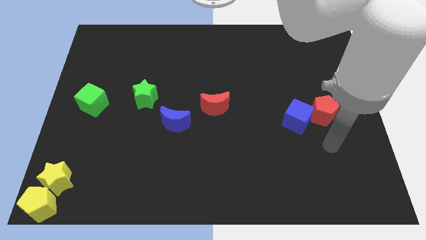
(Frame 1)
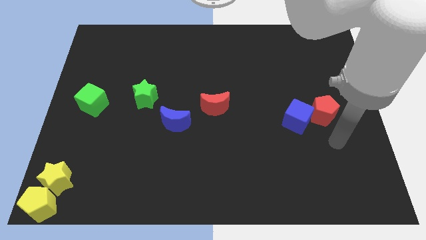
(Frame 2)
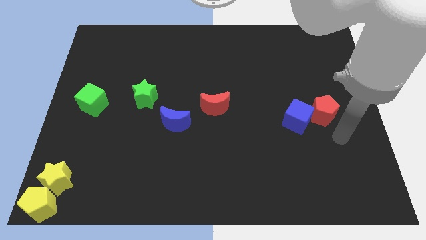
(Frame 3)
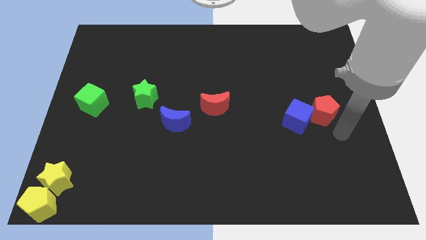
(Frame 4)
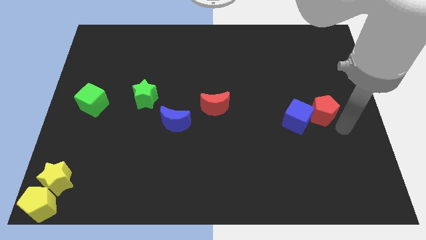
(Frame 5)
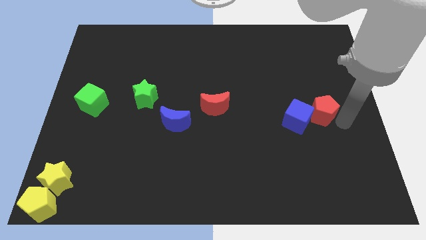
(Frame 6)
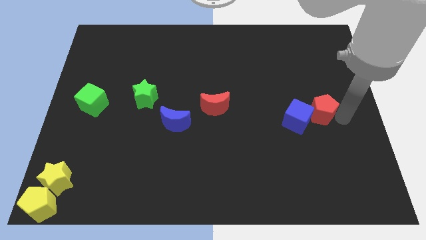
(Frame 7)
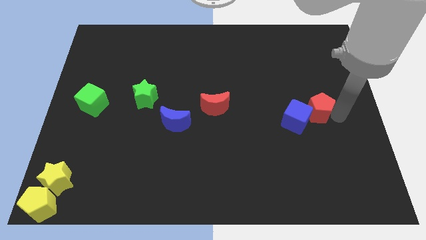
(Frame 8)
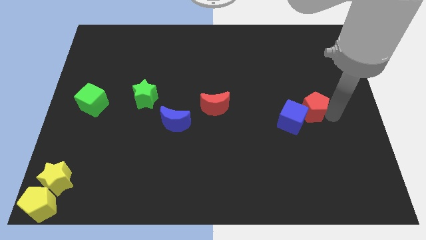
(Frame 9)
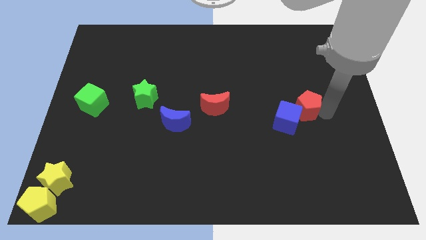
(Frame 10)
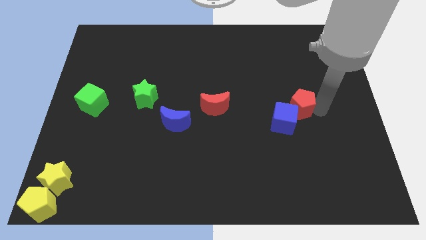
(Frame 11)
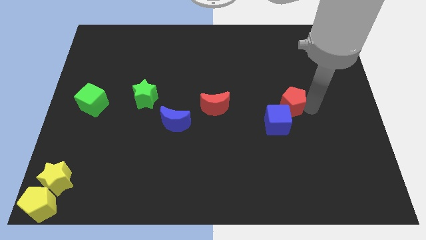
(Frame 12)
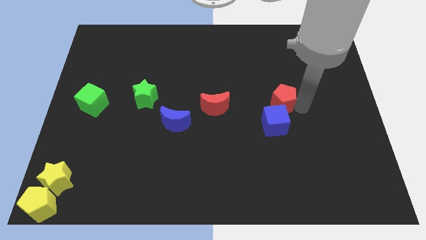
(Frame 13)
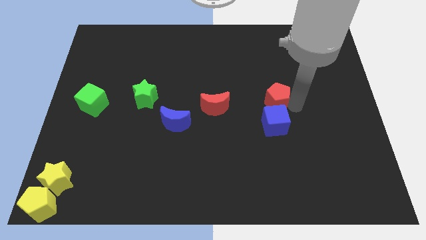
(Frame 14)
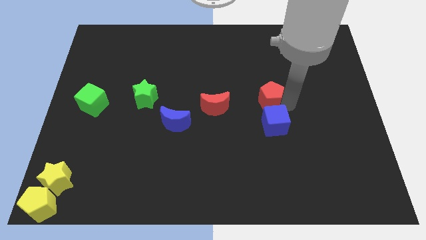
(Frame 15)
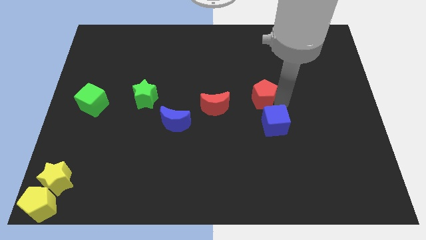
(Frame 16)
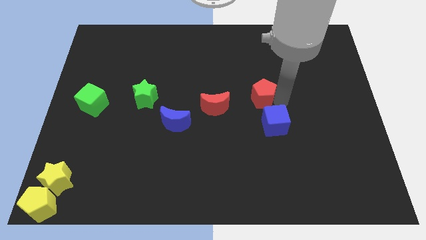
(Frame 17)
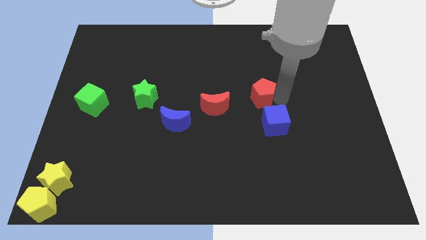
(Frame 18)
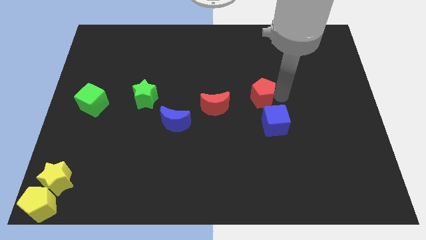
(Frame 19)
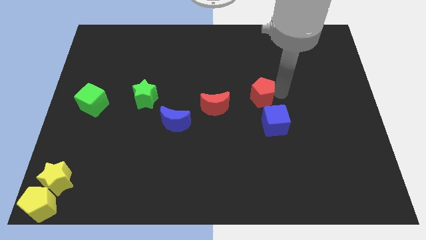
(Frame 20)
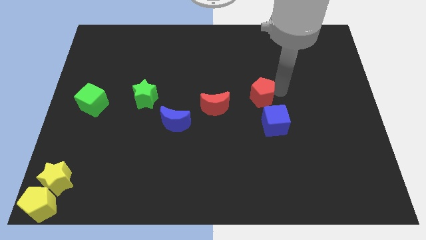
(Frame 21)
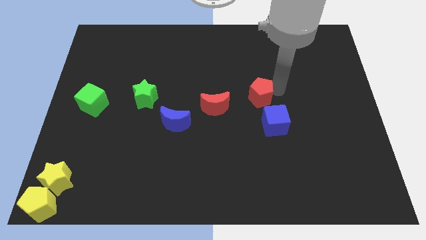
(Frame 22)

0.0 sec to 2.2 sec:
slide the red pentagon towards the red moon

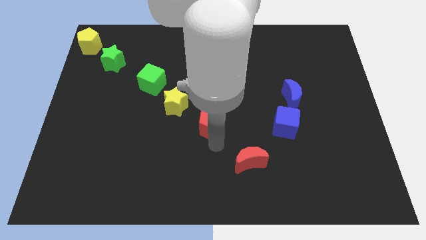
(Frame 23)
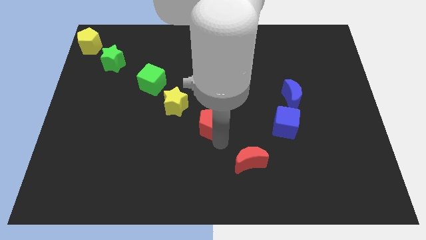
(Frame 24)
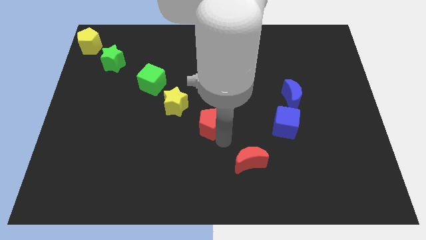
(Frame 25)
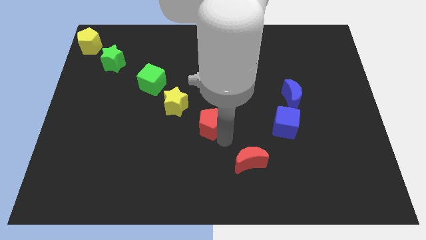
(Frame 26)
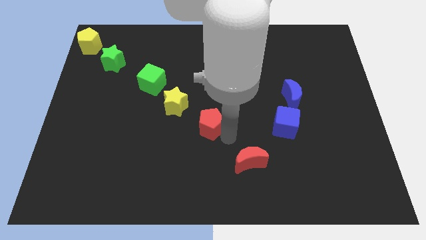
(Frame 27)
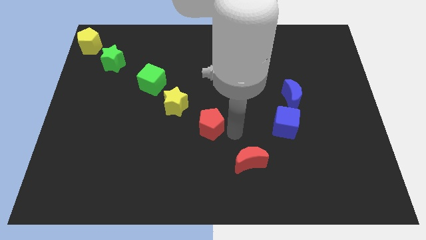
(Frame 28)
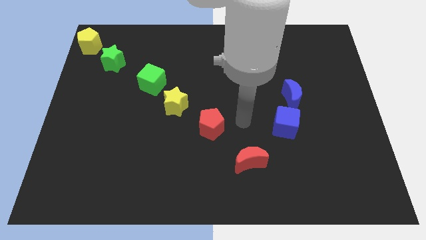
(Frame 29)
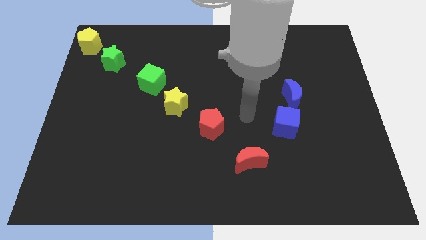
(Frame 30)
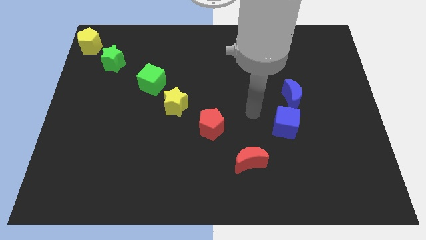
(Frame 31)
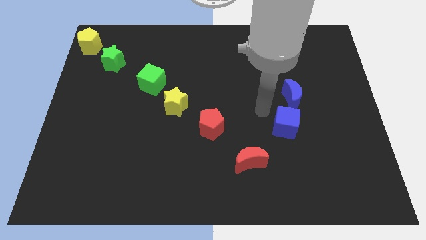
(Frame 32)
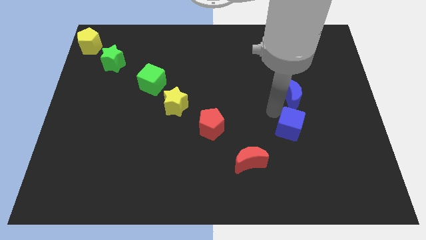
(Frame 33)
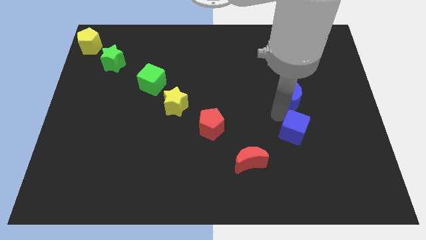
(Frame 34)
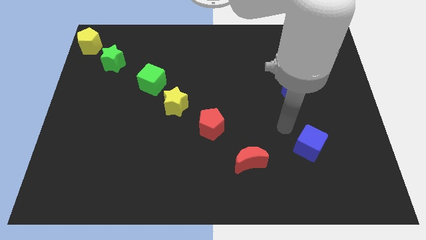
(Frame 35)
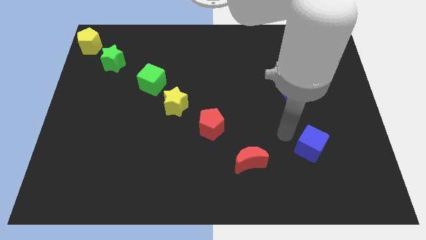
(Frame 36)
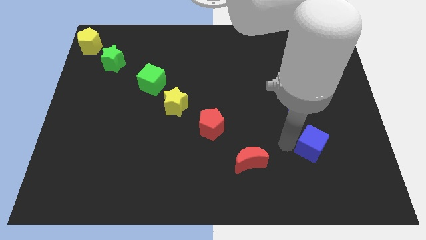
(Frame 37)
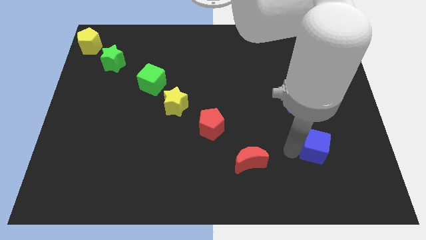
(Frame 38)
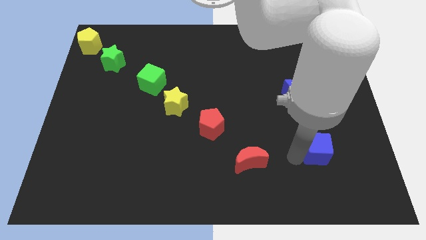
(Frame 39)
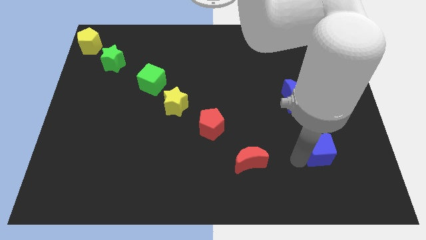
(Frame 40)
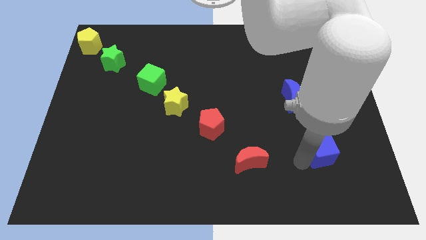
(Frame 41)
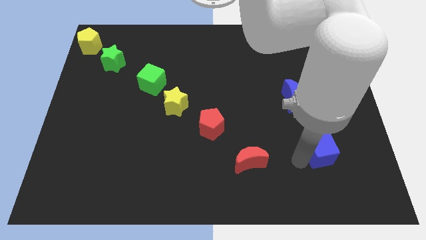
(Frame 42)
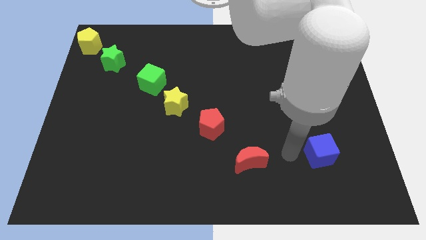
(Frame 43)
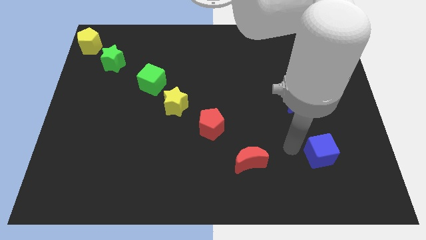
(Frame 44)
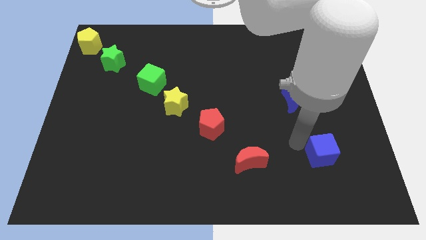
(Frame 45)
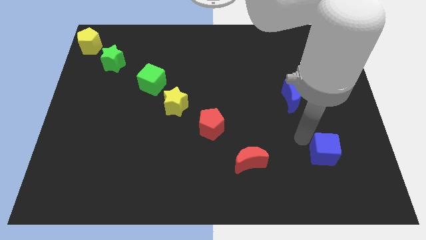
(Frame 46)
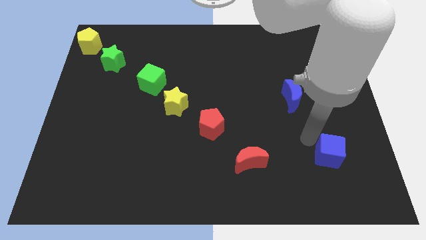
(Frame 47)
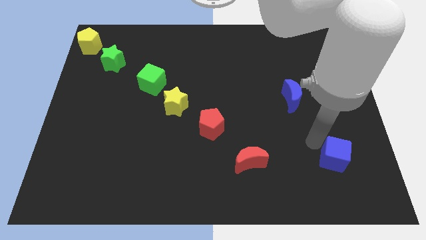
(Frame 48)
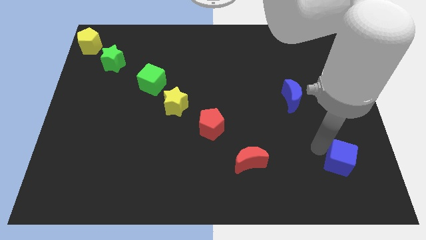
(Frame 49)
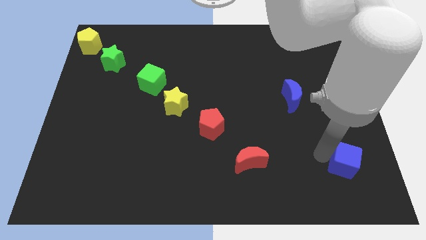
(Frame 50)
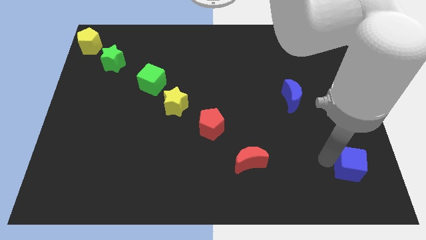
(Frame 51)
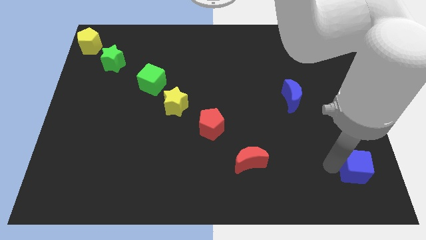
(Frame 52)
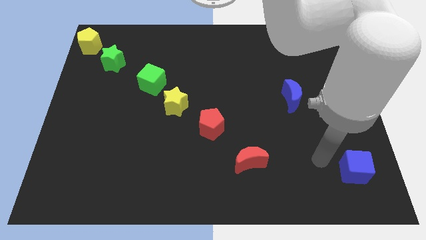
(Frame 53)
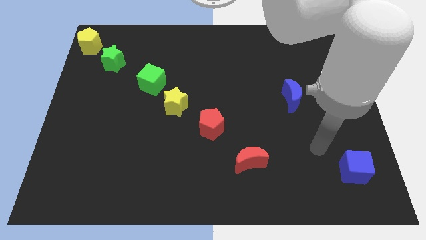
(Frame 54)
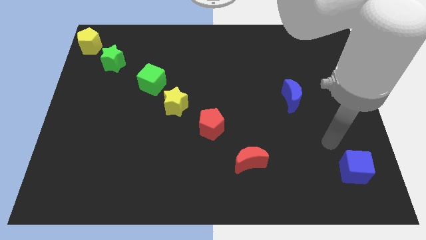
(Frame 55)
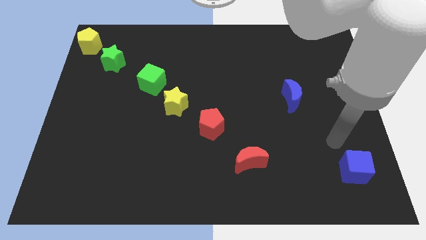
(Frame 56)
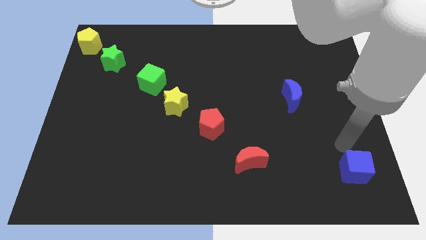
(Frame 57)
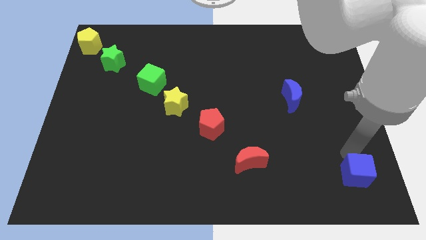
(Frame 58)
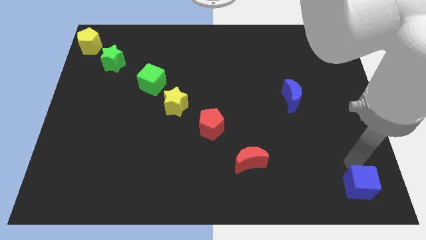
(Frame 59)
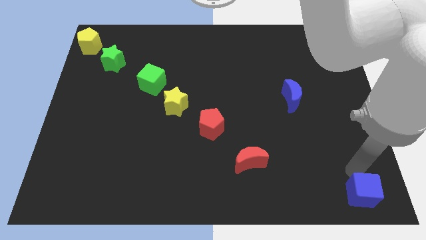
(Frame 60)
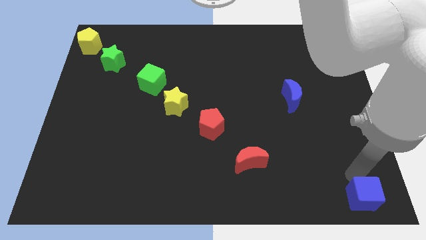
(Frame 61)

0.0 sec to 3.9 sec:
move the blue cube to the bottom right

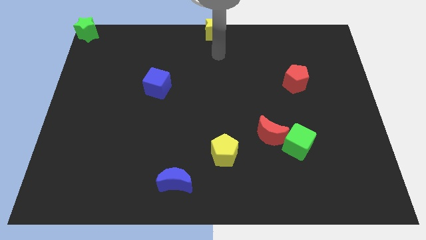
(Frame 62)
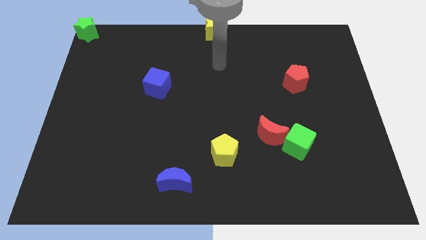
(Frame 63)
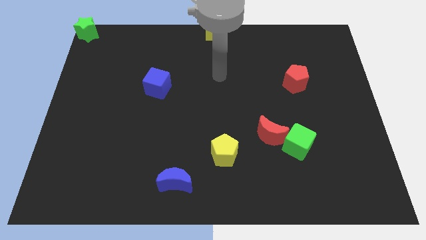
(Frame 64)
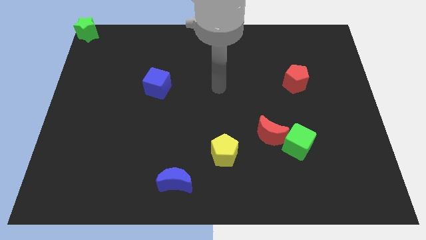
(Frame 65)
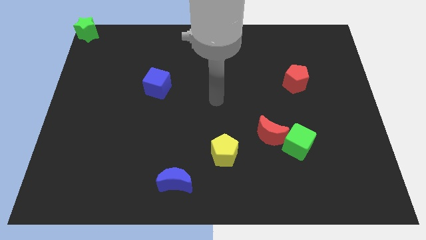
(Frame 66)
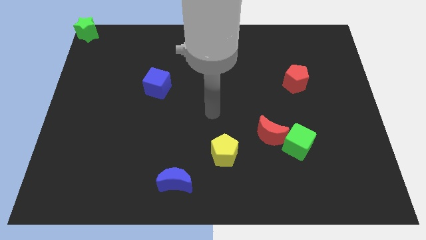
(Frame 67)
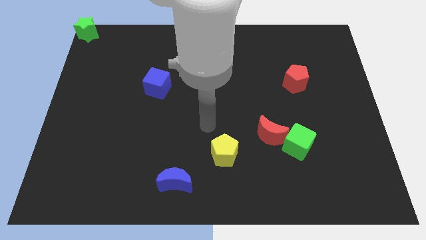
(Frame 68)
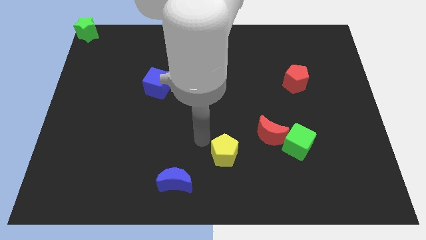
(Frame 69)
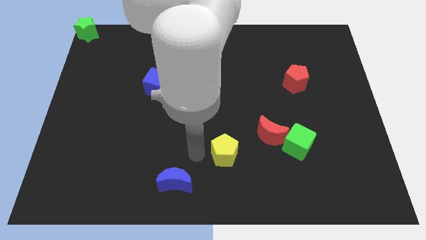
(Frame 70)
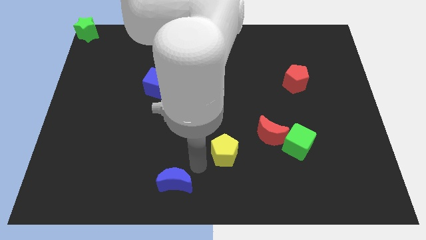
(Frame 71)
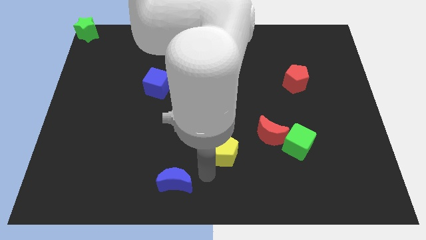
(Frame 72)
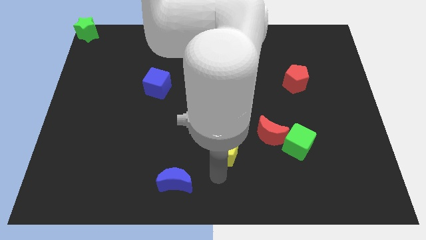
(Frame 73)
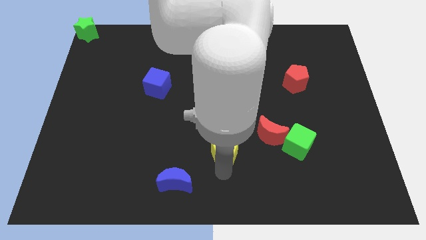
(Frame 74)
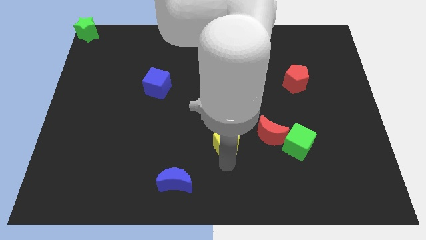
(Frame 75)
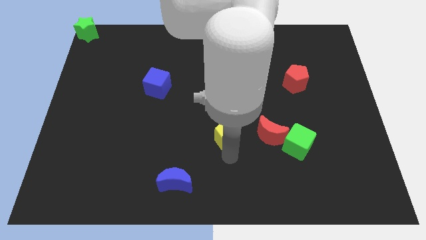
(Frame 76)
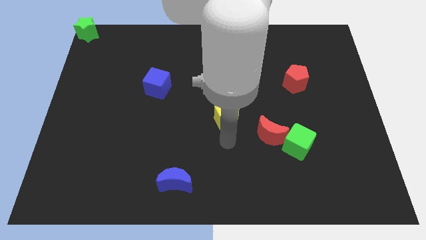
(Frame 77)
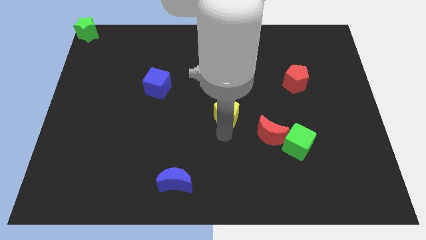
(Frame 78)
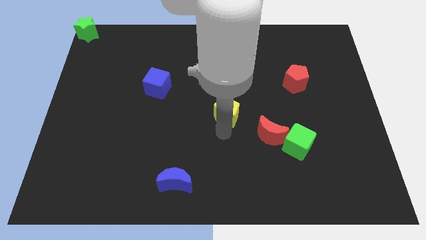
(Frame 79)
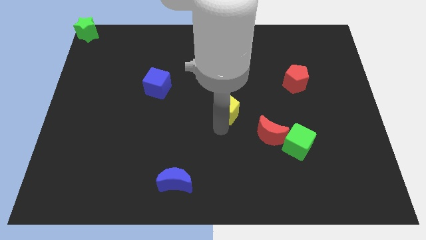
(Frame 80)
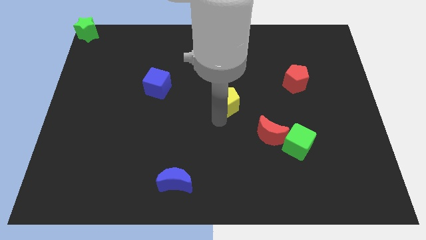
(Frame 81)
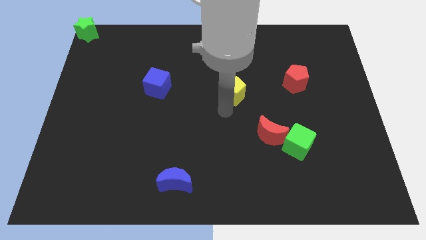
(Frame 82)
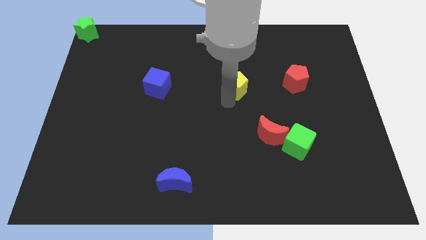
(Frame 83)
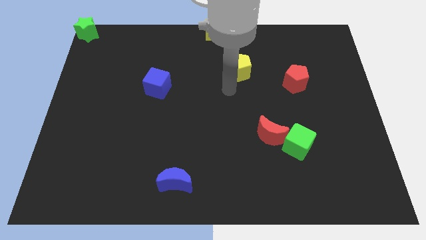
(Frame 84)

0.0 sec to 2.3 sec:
slightly push the yellow pentagon towards top

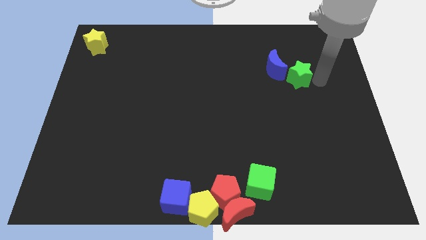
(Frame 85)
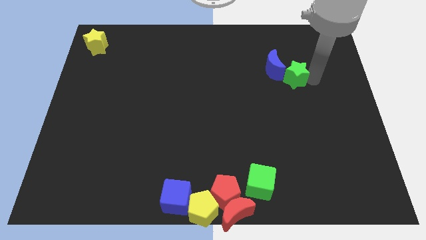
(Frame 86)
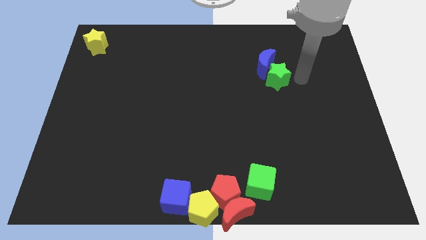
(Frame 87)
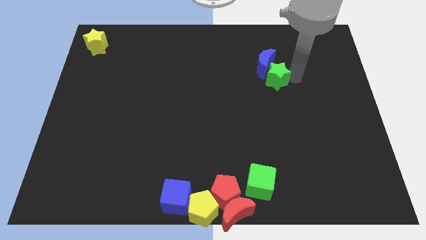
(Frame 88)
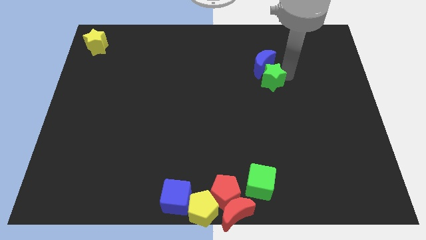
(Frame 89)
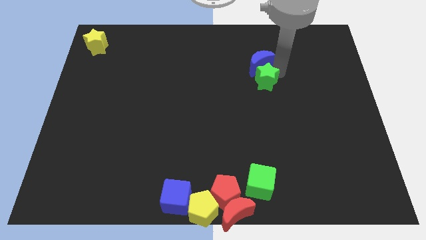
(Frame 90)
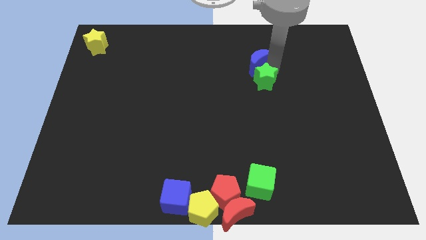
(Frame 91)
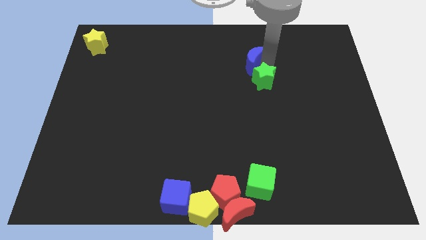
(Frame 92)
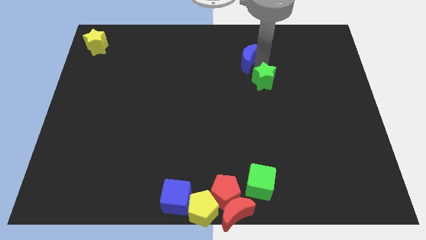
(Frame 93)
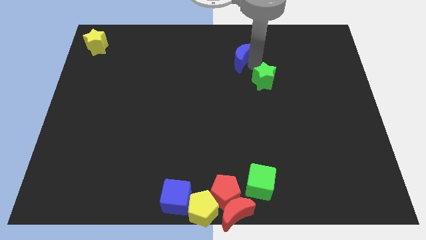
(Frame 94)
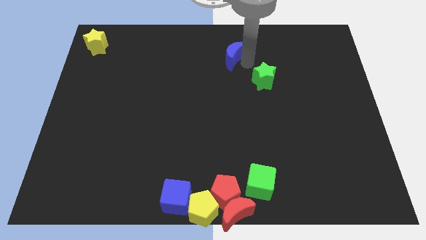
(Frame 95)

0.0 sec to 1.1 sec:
separate blue moon from green star
